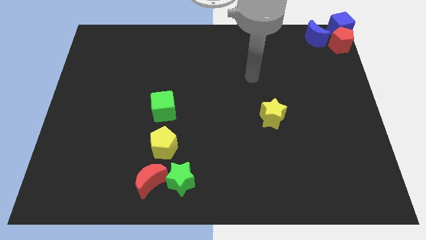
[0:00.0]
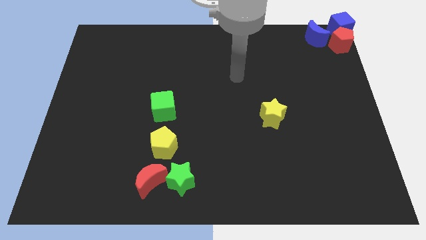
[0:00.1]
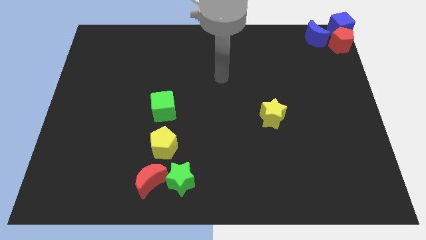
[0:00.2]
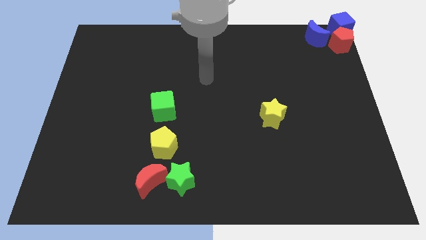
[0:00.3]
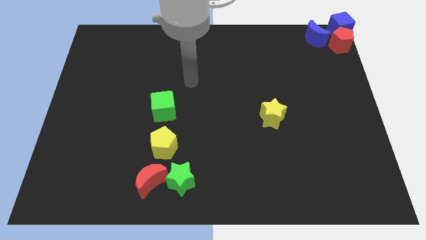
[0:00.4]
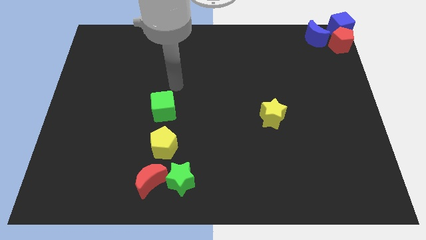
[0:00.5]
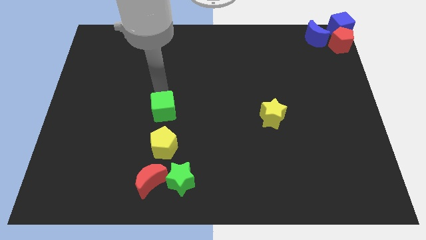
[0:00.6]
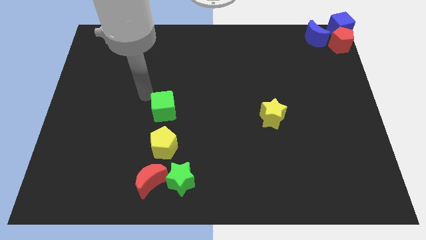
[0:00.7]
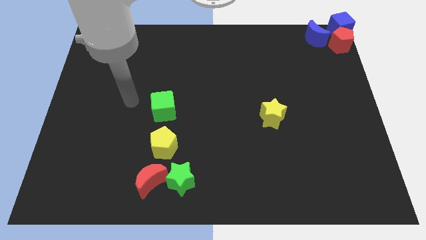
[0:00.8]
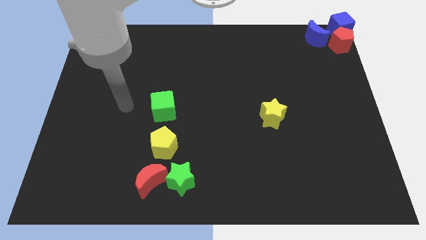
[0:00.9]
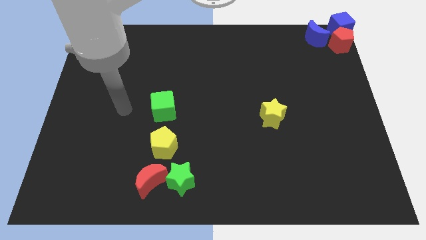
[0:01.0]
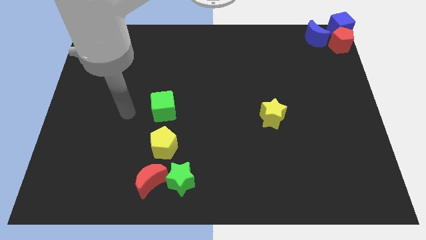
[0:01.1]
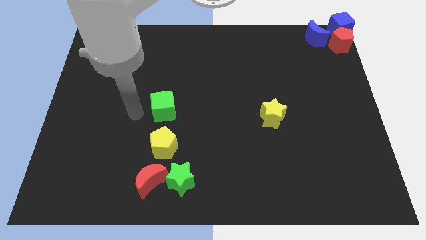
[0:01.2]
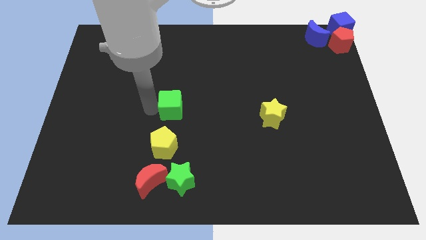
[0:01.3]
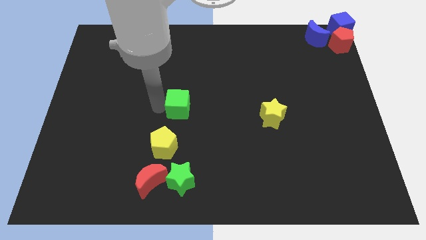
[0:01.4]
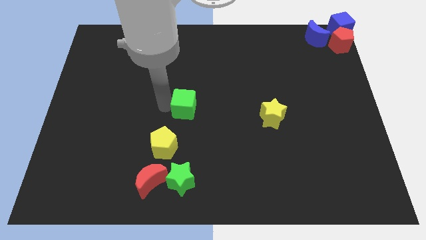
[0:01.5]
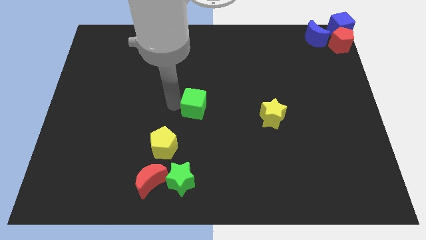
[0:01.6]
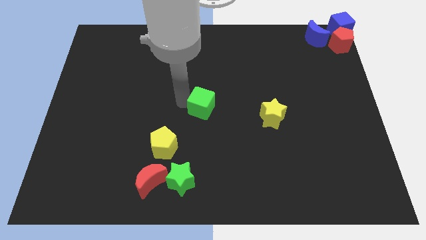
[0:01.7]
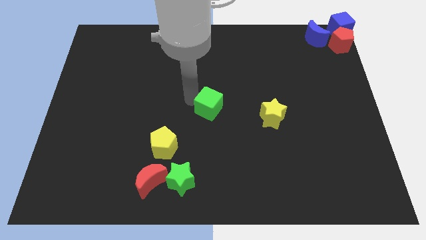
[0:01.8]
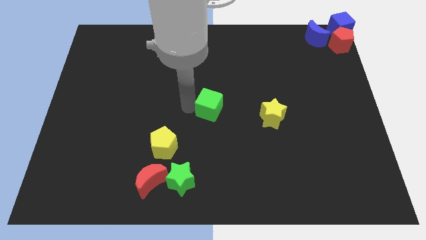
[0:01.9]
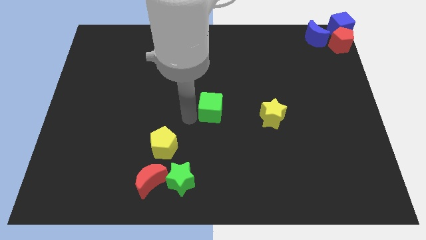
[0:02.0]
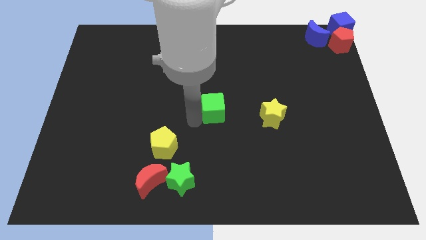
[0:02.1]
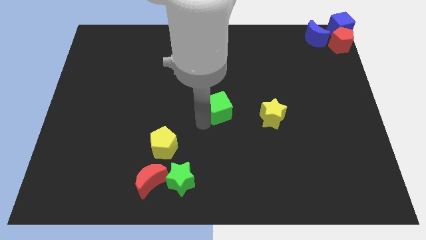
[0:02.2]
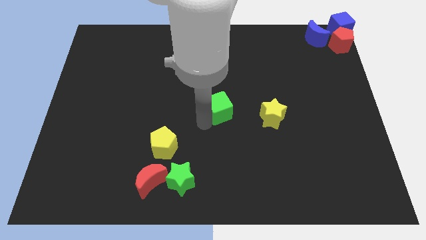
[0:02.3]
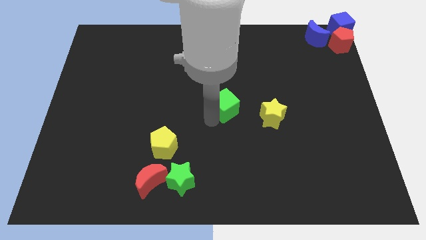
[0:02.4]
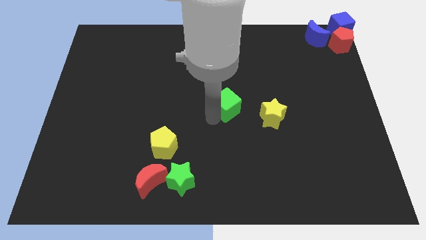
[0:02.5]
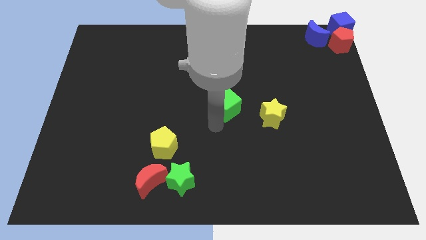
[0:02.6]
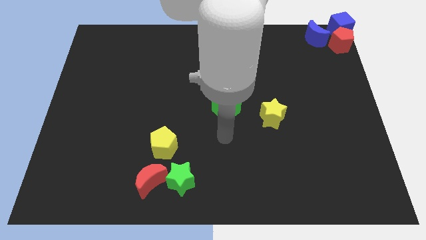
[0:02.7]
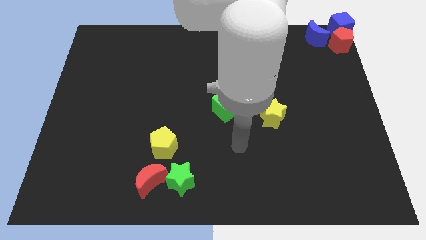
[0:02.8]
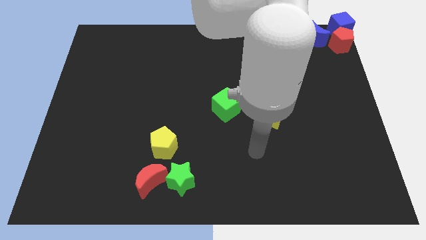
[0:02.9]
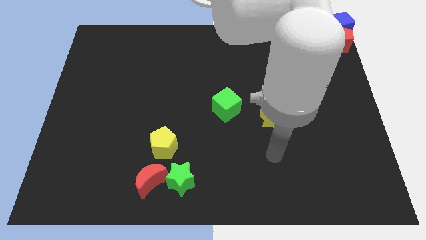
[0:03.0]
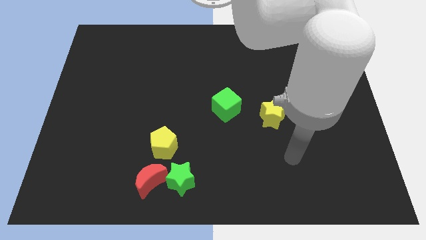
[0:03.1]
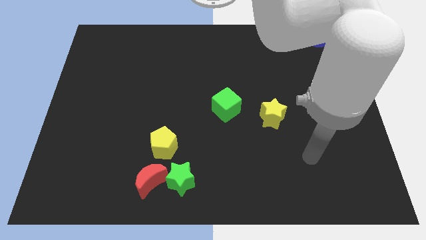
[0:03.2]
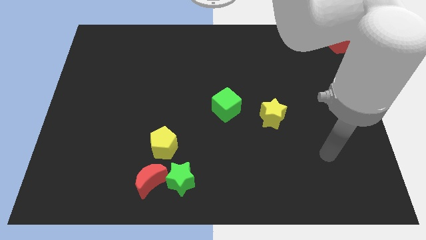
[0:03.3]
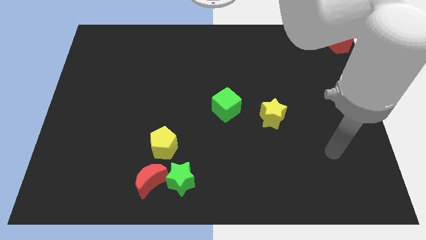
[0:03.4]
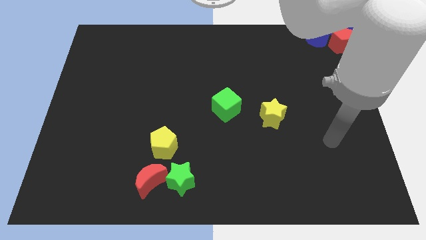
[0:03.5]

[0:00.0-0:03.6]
push the green cube to the left of the yellow star

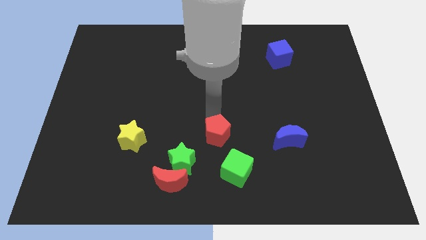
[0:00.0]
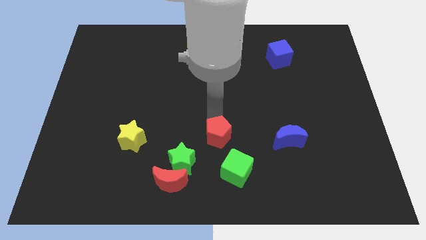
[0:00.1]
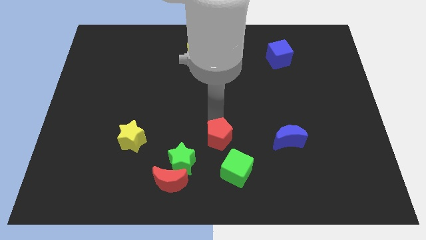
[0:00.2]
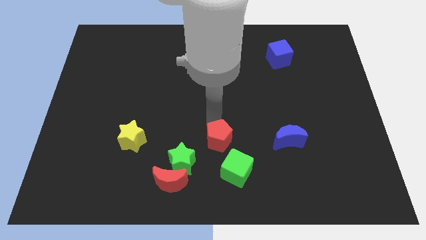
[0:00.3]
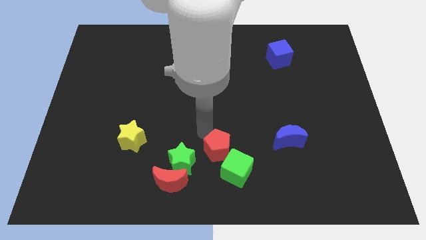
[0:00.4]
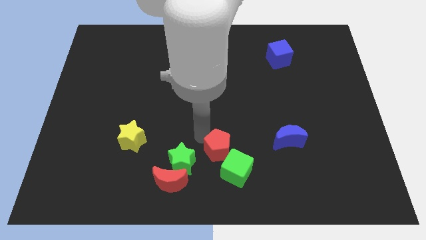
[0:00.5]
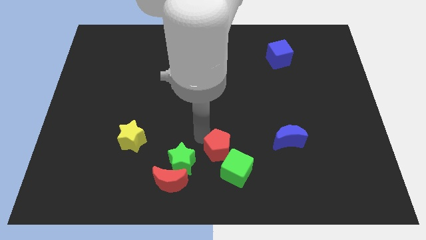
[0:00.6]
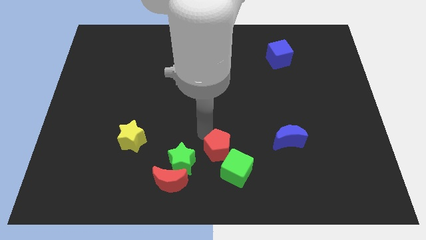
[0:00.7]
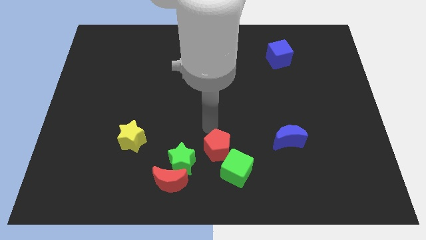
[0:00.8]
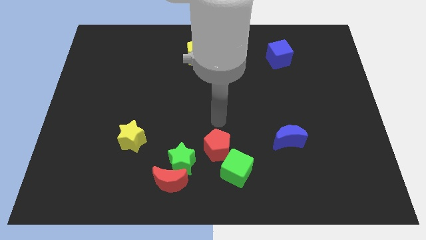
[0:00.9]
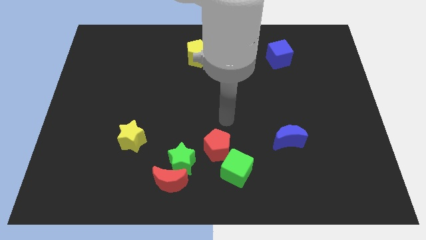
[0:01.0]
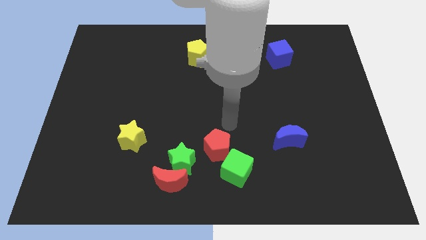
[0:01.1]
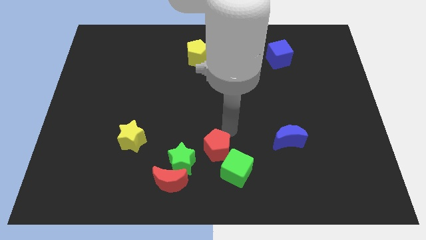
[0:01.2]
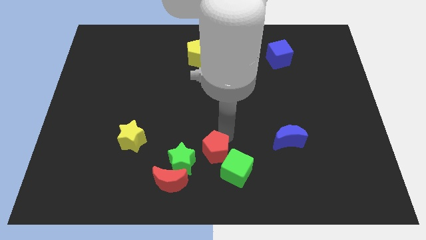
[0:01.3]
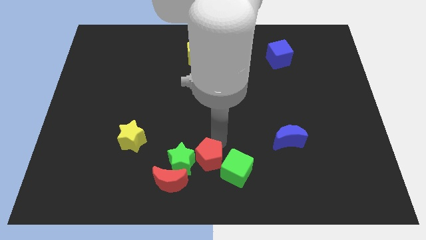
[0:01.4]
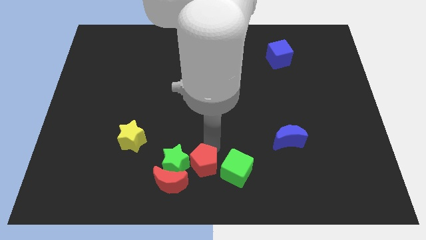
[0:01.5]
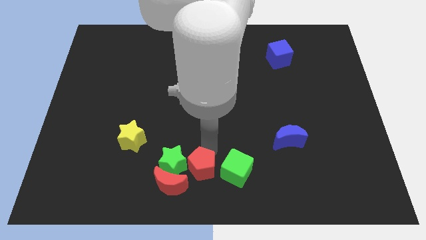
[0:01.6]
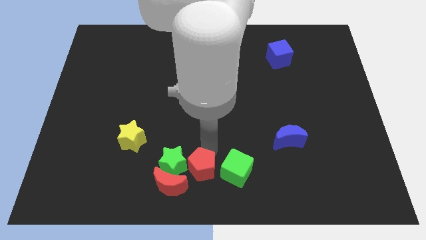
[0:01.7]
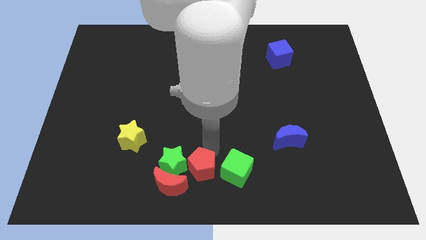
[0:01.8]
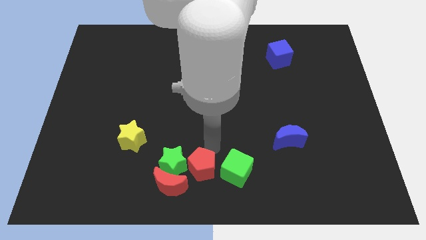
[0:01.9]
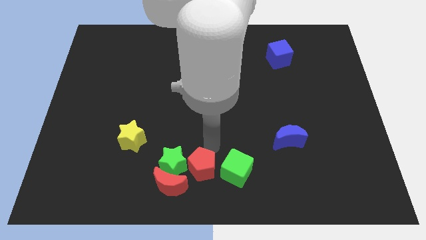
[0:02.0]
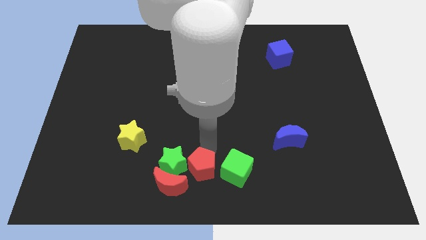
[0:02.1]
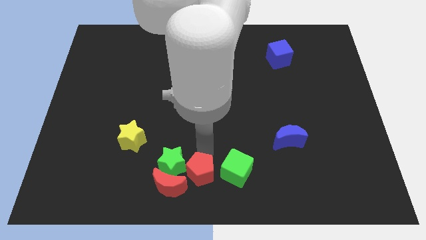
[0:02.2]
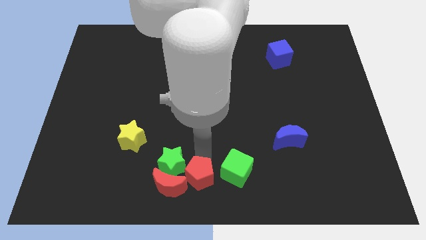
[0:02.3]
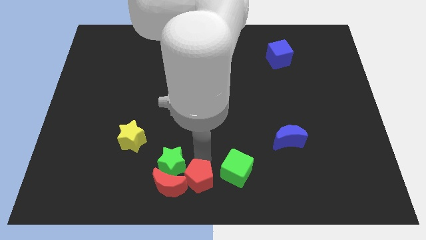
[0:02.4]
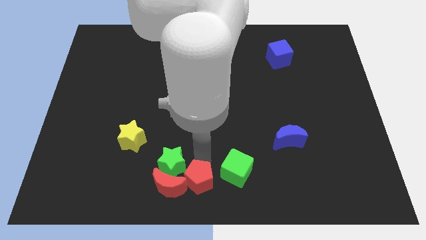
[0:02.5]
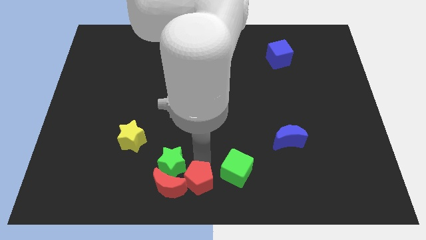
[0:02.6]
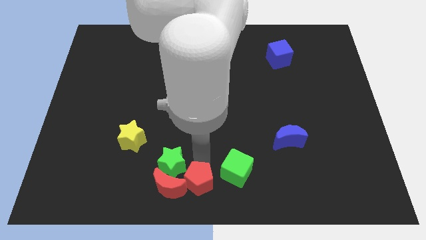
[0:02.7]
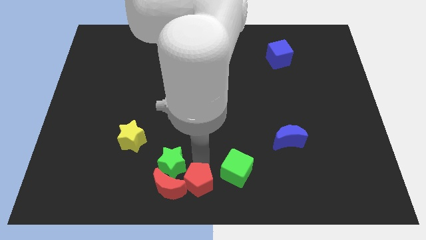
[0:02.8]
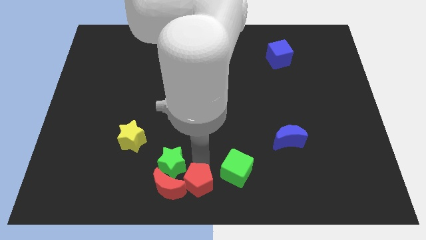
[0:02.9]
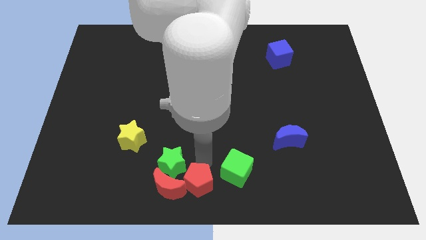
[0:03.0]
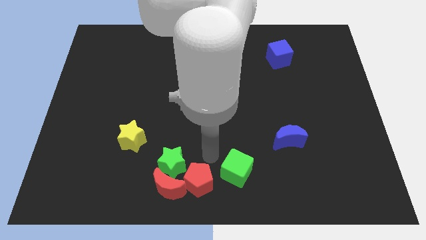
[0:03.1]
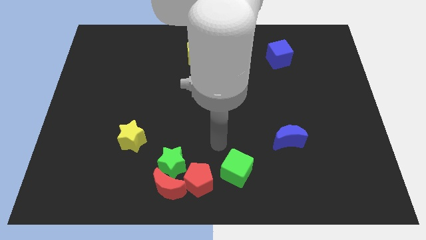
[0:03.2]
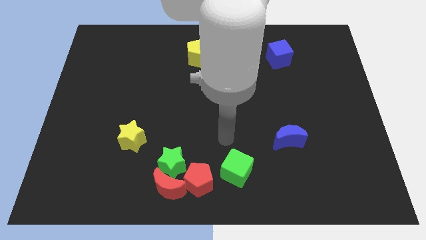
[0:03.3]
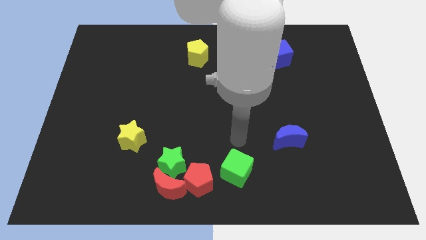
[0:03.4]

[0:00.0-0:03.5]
push the red pentagon right to the red moon

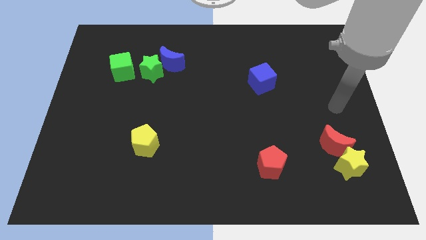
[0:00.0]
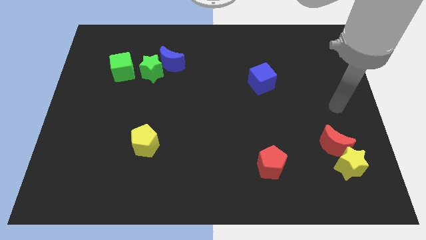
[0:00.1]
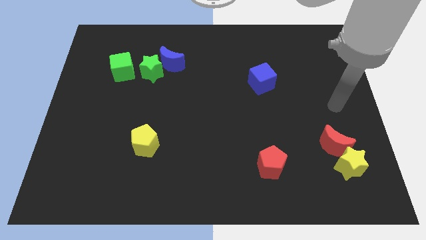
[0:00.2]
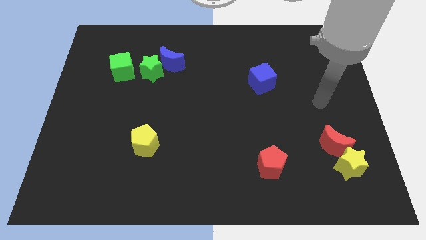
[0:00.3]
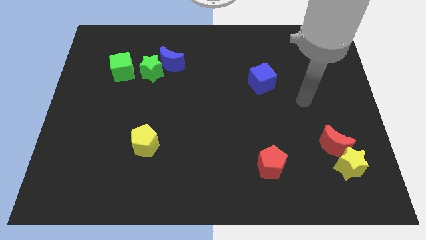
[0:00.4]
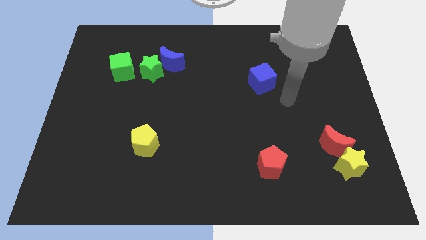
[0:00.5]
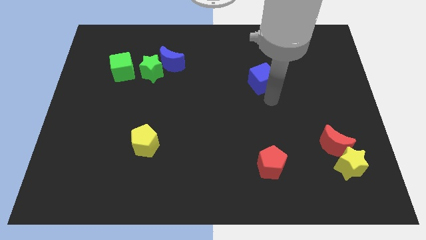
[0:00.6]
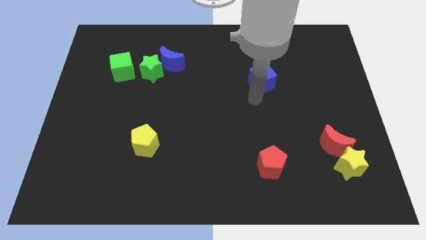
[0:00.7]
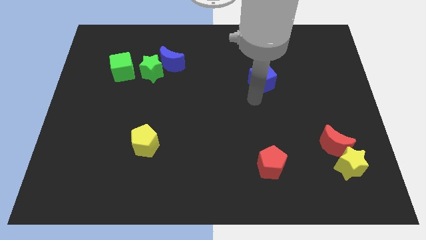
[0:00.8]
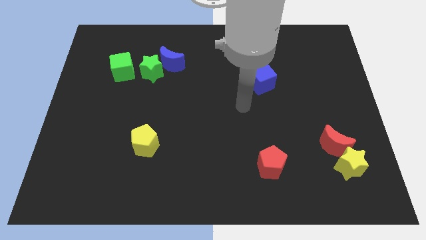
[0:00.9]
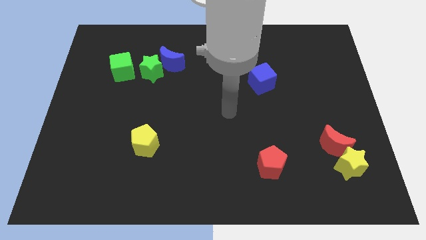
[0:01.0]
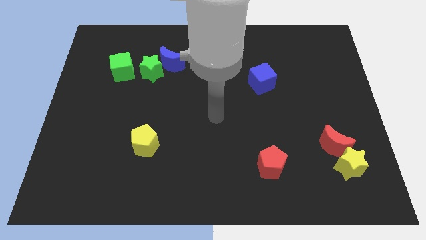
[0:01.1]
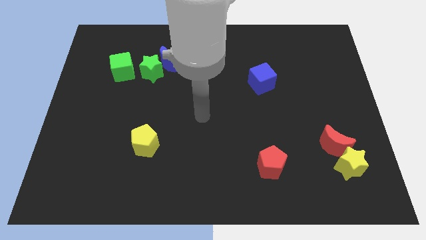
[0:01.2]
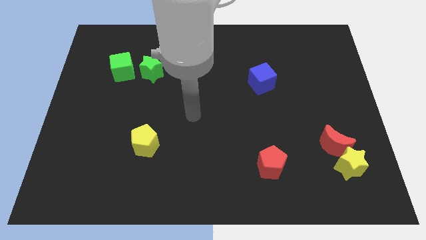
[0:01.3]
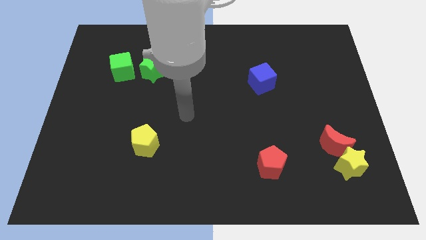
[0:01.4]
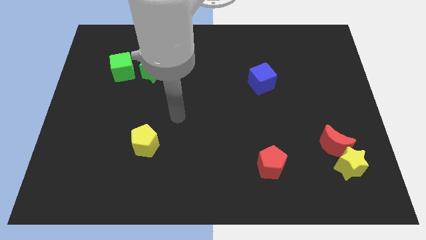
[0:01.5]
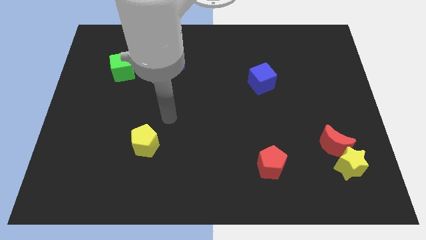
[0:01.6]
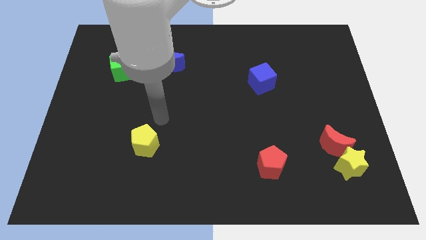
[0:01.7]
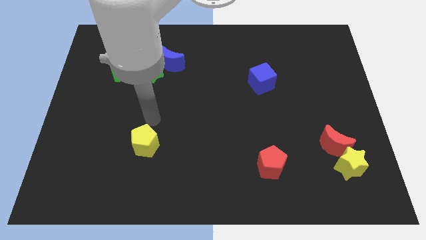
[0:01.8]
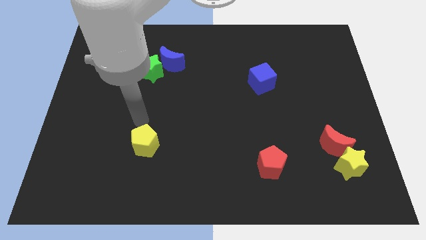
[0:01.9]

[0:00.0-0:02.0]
move the arm above the yellow pentagon
